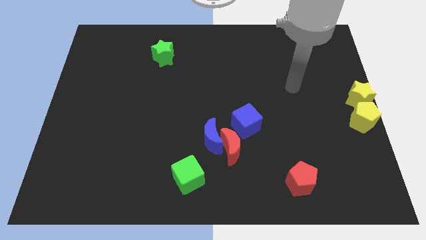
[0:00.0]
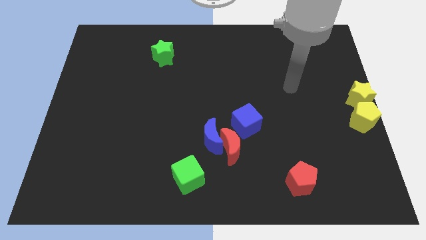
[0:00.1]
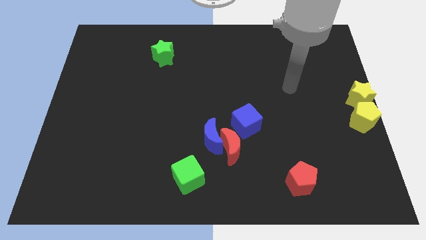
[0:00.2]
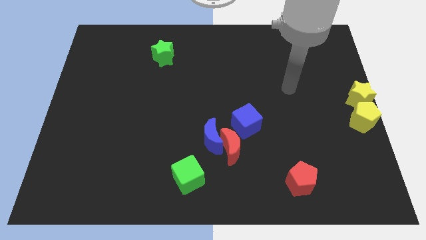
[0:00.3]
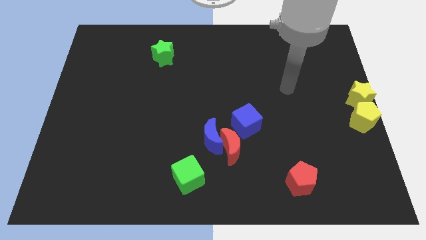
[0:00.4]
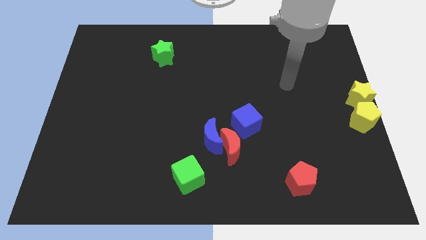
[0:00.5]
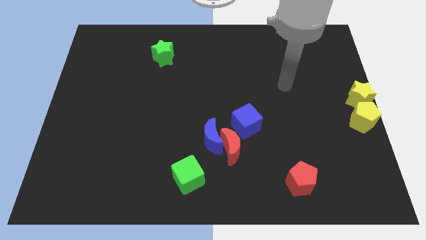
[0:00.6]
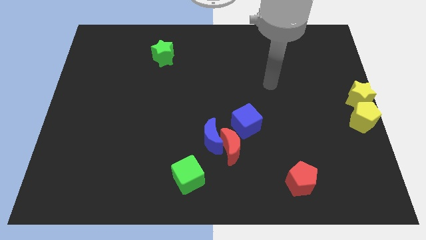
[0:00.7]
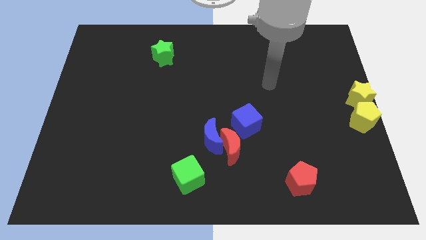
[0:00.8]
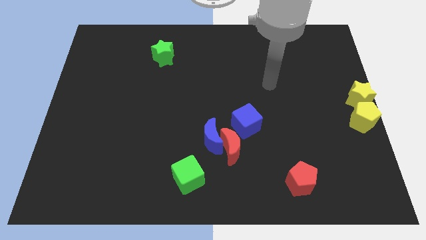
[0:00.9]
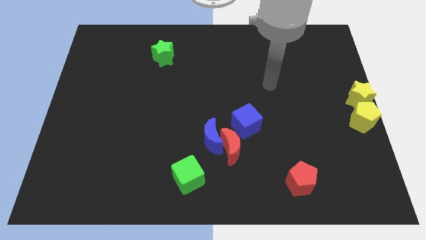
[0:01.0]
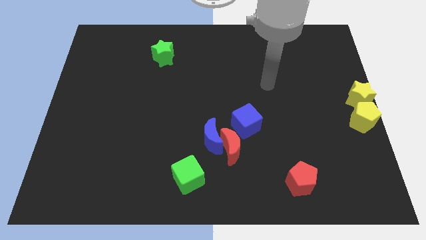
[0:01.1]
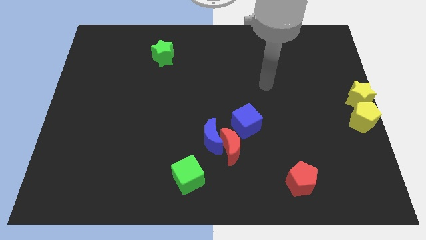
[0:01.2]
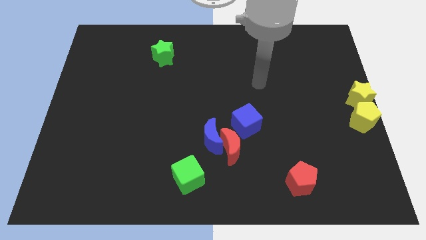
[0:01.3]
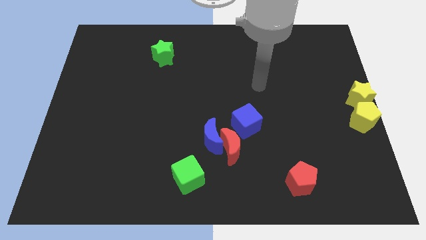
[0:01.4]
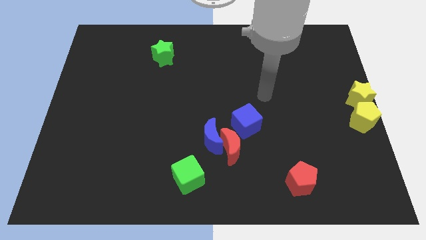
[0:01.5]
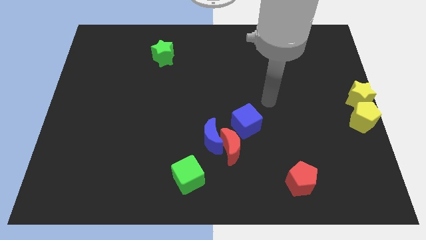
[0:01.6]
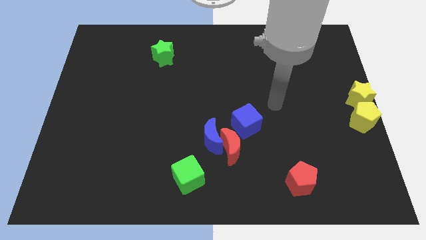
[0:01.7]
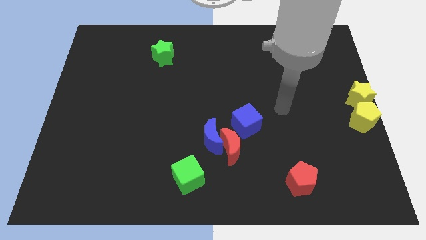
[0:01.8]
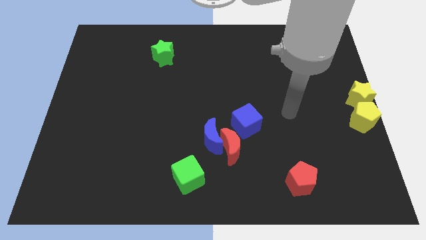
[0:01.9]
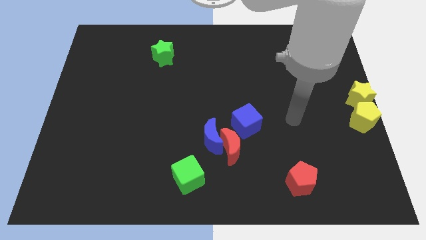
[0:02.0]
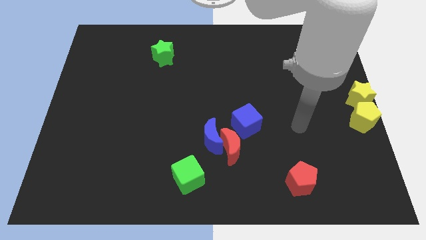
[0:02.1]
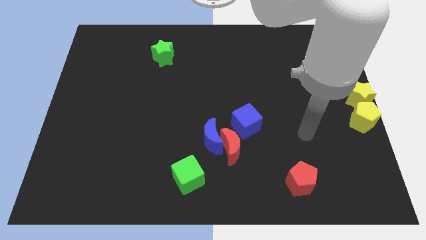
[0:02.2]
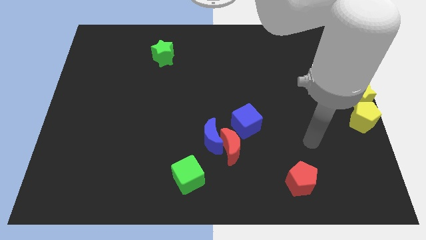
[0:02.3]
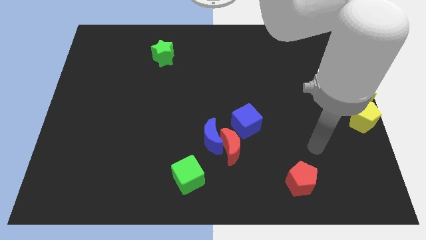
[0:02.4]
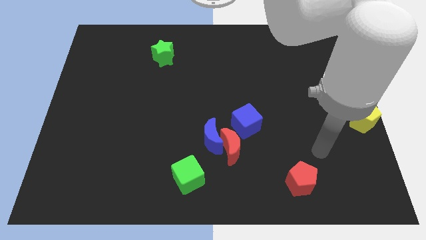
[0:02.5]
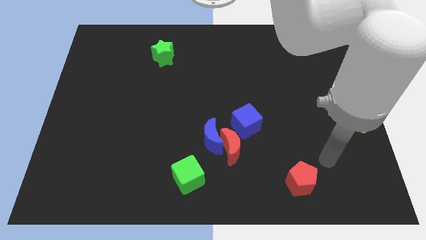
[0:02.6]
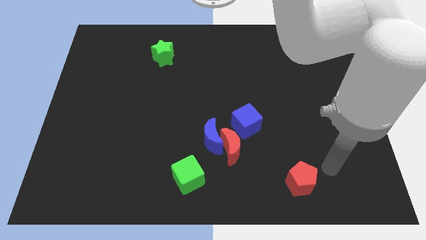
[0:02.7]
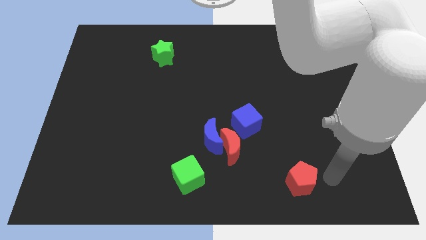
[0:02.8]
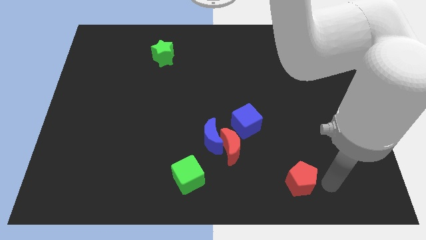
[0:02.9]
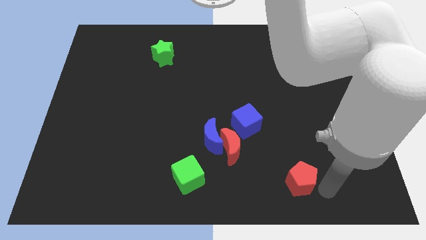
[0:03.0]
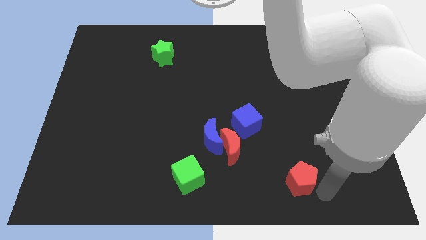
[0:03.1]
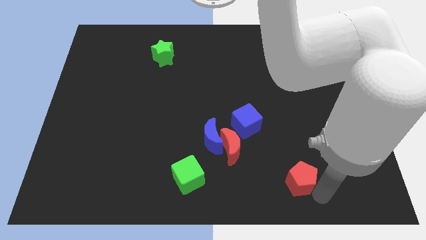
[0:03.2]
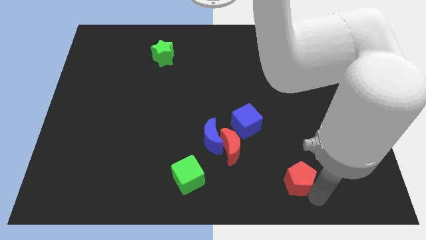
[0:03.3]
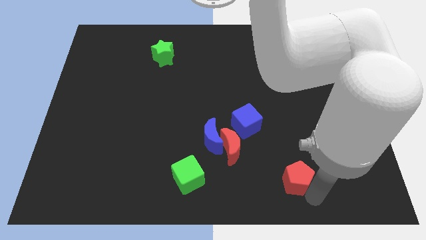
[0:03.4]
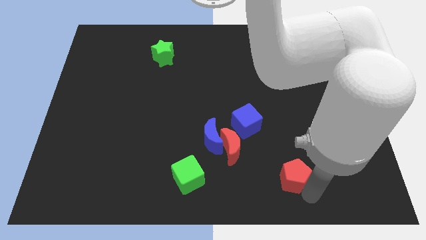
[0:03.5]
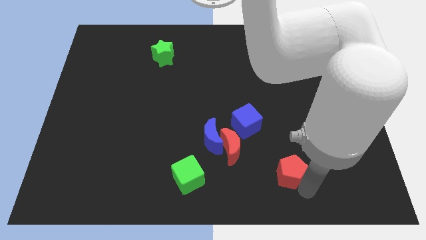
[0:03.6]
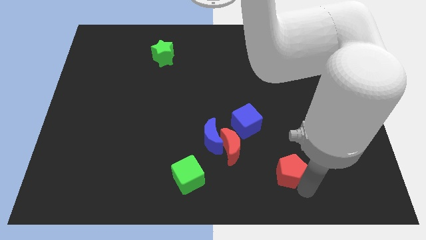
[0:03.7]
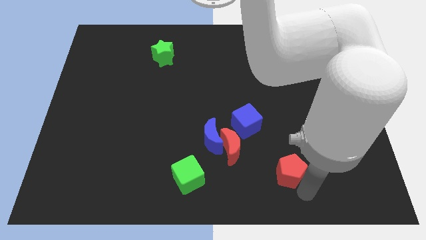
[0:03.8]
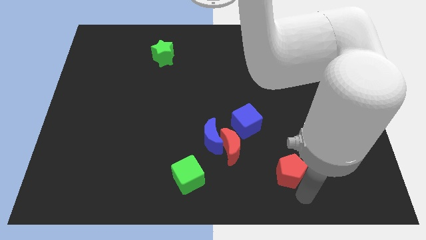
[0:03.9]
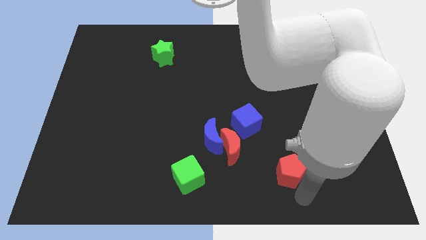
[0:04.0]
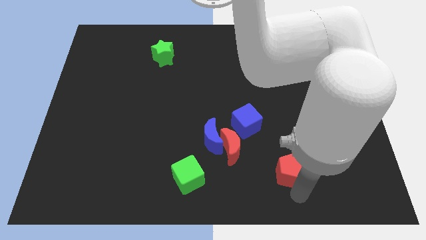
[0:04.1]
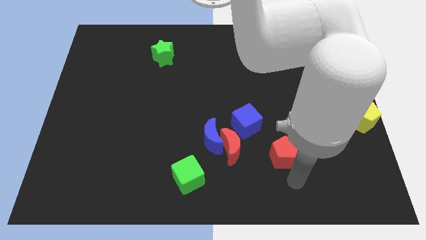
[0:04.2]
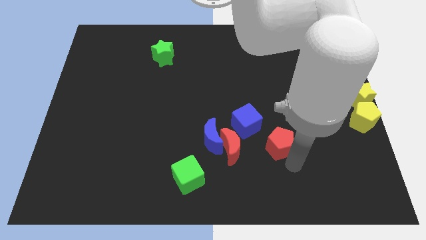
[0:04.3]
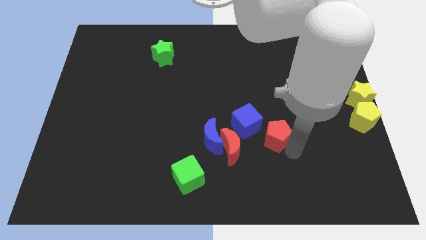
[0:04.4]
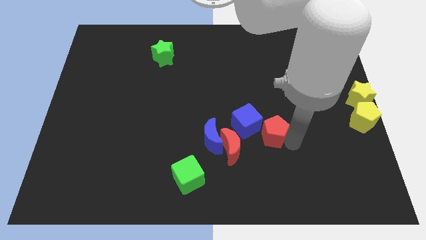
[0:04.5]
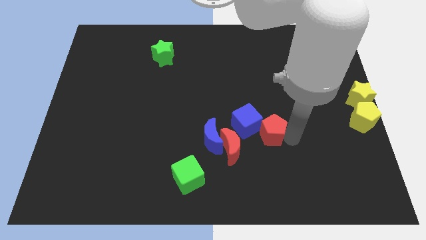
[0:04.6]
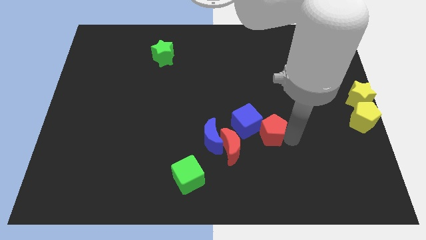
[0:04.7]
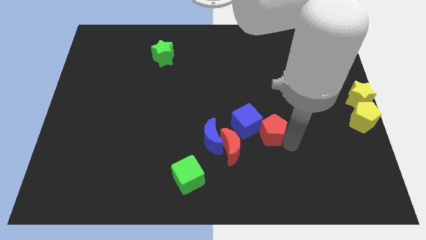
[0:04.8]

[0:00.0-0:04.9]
push the red pentagon into the blue cube

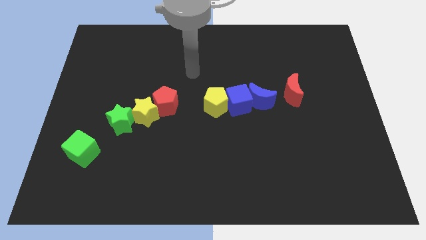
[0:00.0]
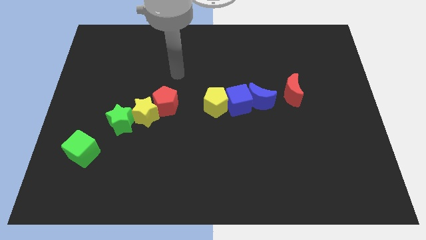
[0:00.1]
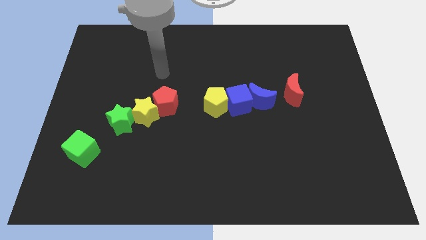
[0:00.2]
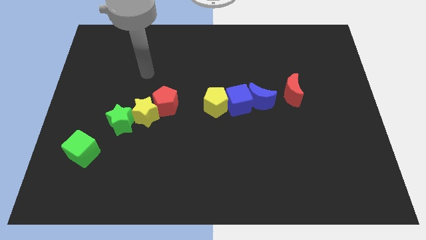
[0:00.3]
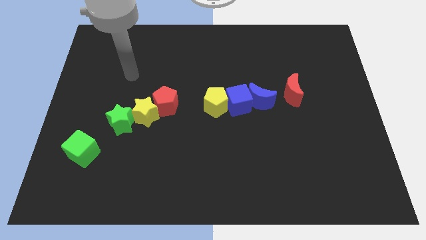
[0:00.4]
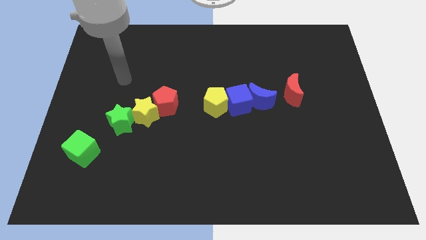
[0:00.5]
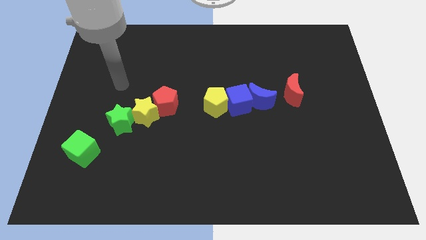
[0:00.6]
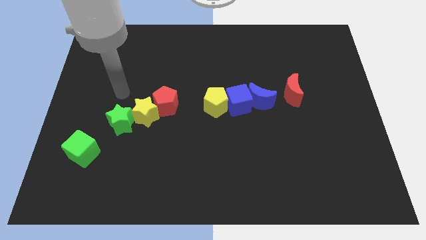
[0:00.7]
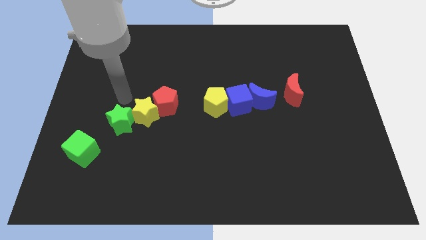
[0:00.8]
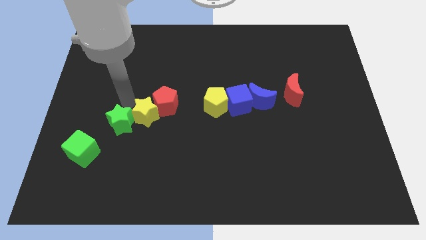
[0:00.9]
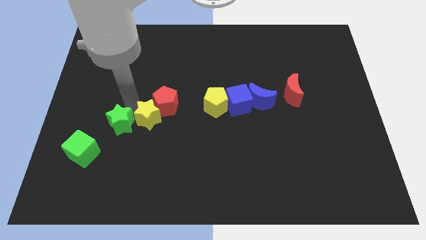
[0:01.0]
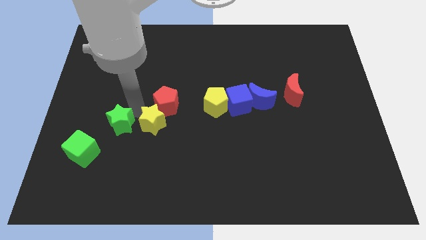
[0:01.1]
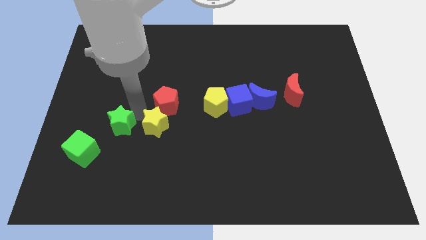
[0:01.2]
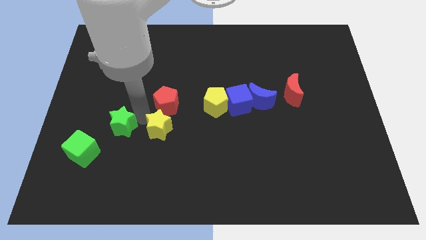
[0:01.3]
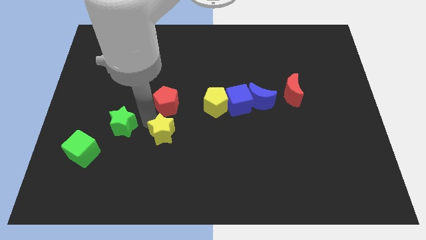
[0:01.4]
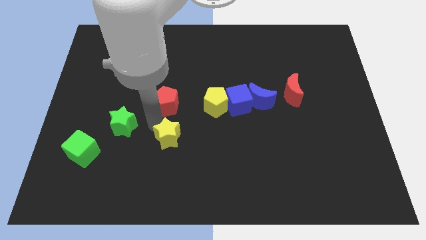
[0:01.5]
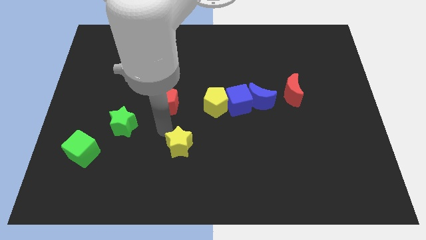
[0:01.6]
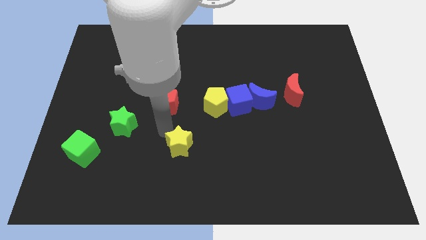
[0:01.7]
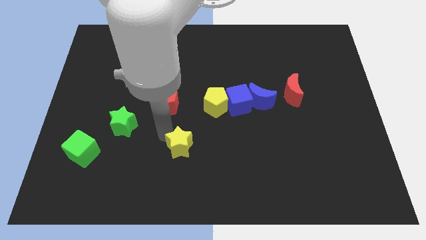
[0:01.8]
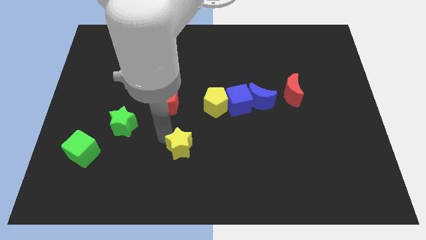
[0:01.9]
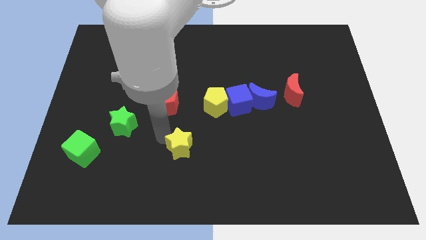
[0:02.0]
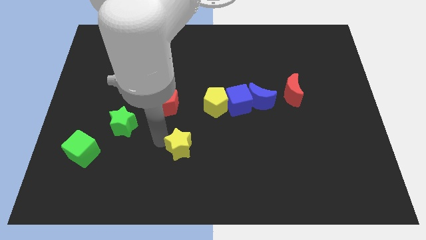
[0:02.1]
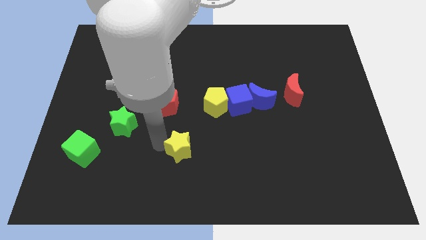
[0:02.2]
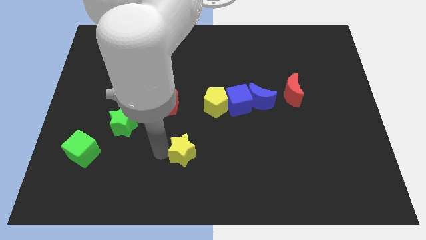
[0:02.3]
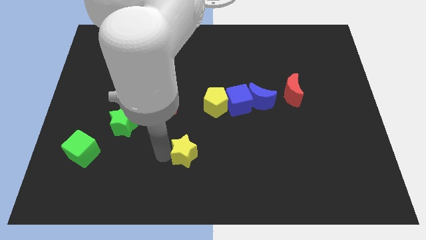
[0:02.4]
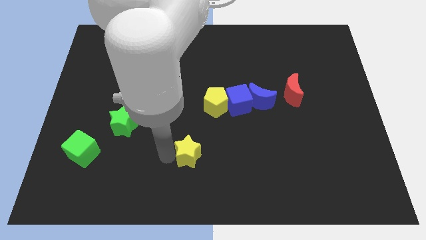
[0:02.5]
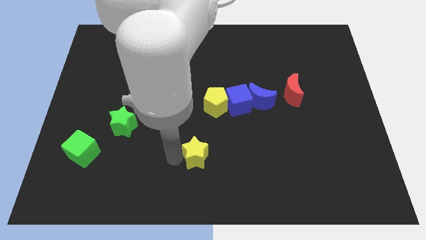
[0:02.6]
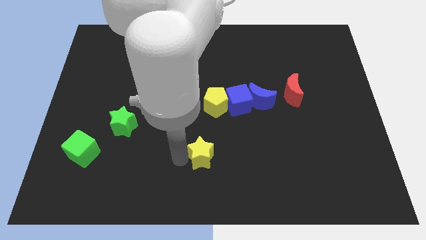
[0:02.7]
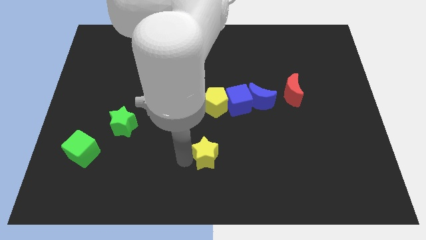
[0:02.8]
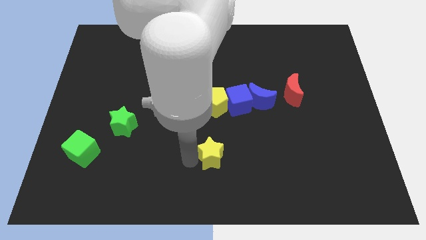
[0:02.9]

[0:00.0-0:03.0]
place the yellow star below the yellow pentagon

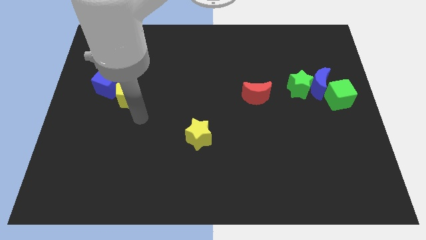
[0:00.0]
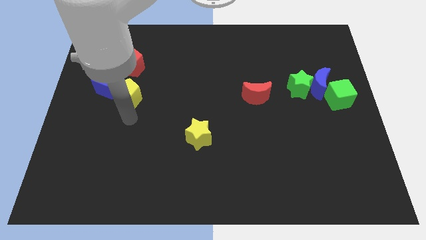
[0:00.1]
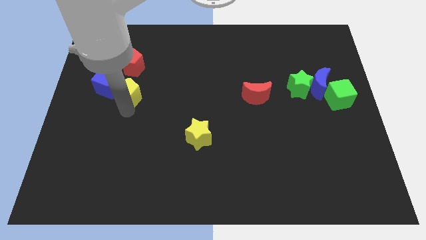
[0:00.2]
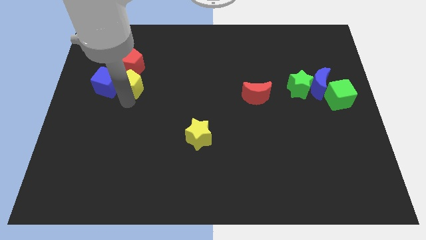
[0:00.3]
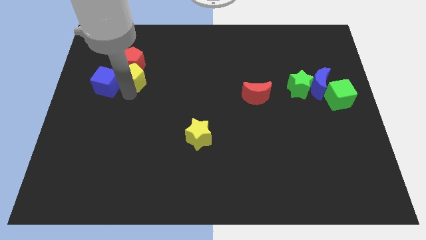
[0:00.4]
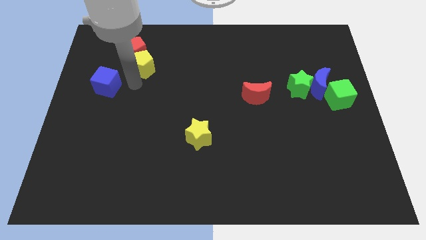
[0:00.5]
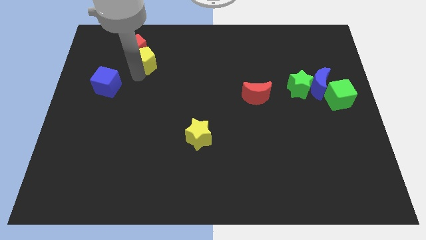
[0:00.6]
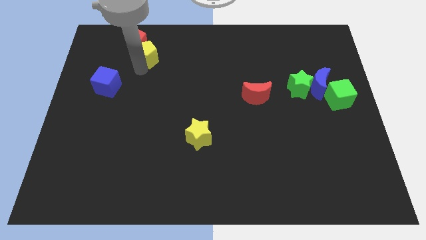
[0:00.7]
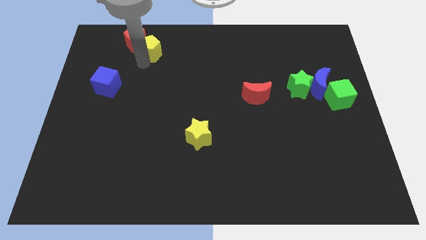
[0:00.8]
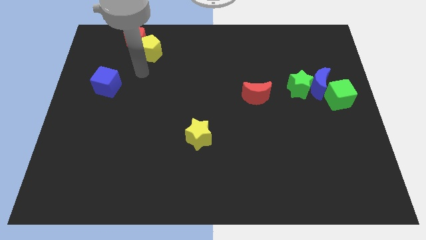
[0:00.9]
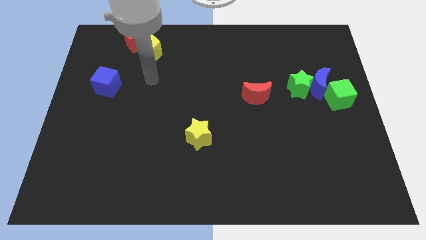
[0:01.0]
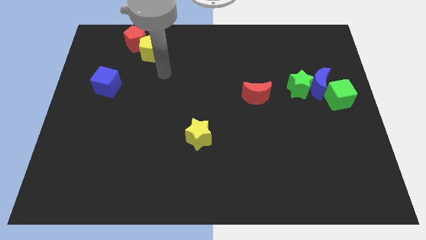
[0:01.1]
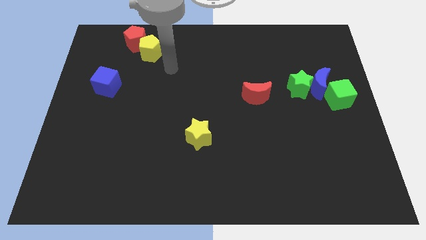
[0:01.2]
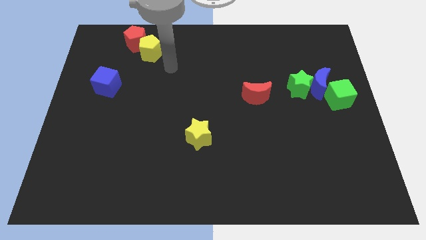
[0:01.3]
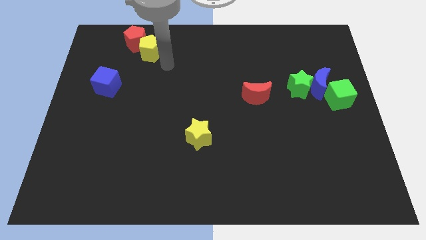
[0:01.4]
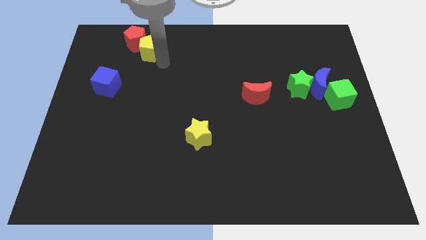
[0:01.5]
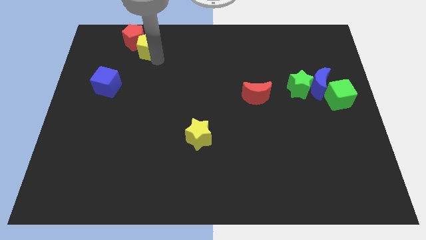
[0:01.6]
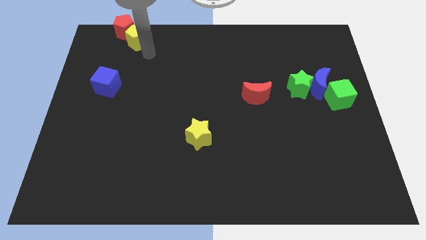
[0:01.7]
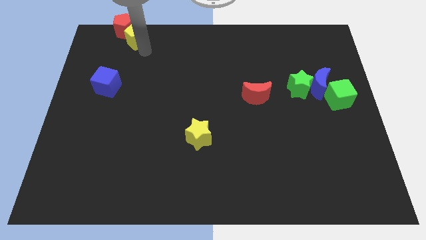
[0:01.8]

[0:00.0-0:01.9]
push the yellow pentagon into the red pentagon
